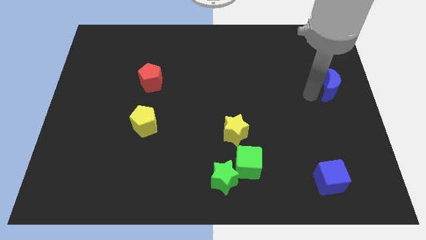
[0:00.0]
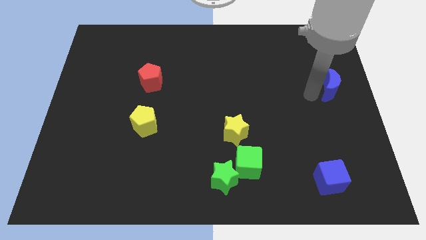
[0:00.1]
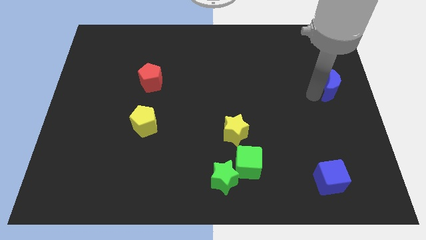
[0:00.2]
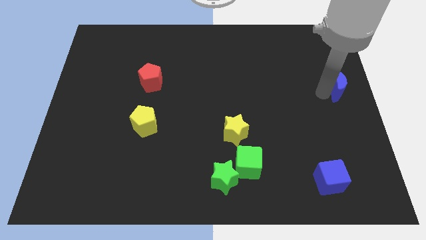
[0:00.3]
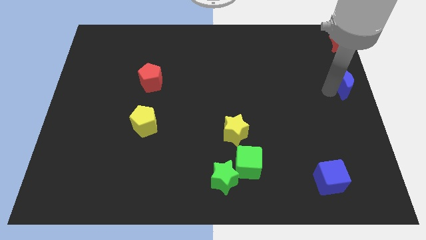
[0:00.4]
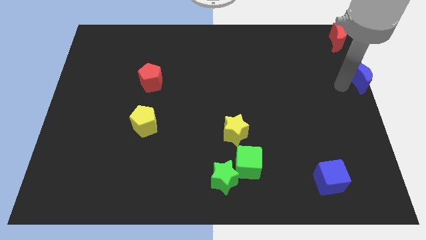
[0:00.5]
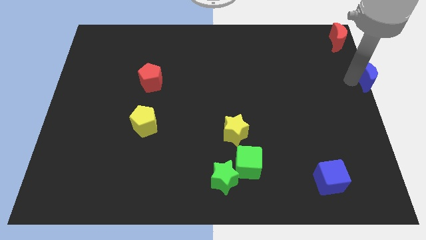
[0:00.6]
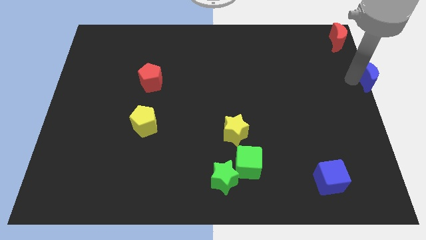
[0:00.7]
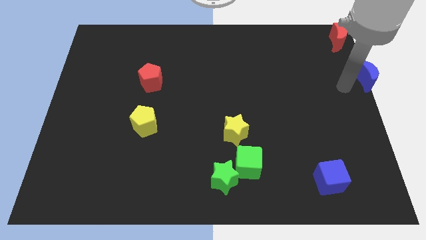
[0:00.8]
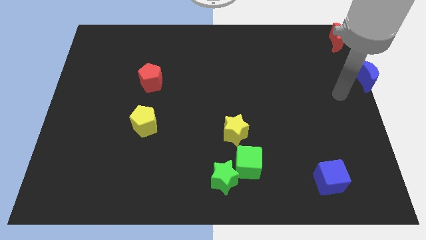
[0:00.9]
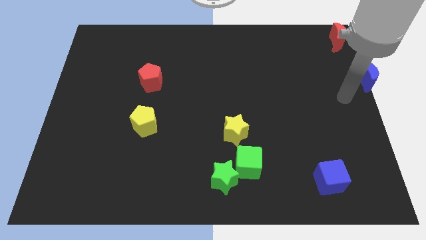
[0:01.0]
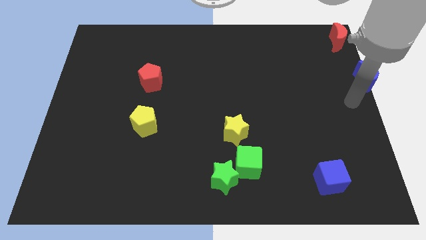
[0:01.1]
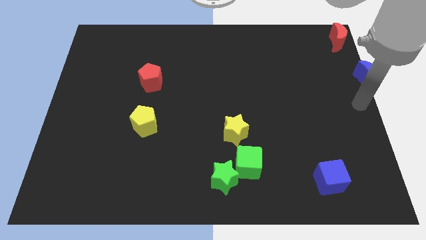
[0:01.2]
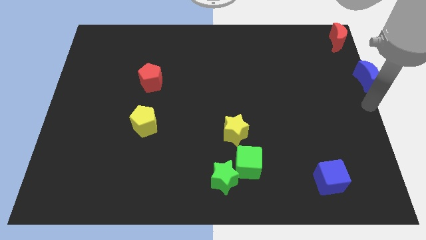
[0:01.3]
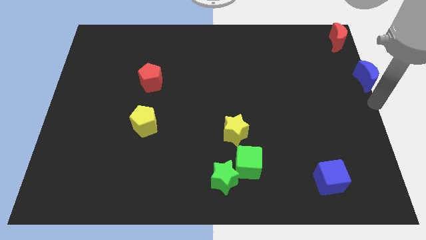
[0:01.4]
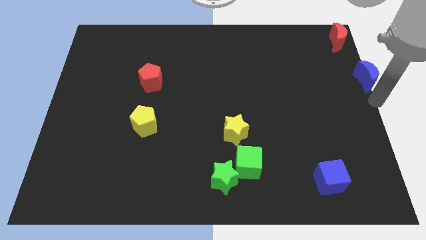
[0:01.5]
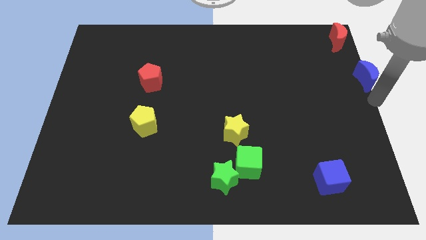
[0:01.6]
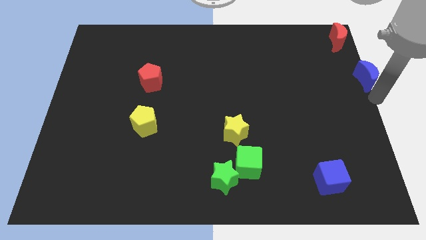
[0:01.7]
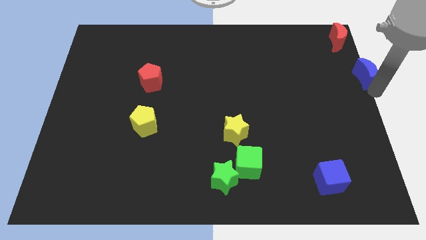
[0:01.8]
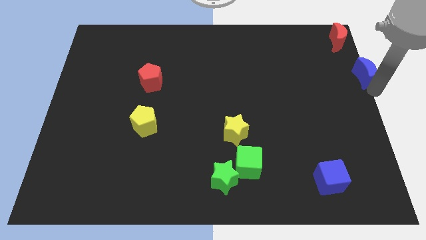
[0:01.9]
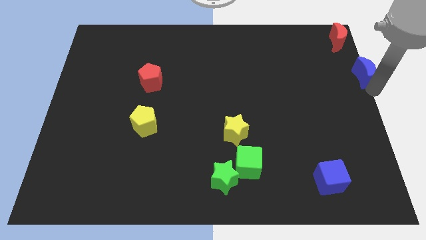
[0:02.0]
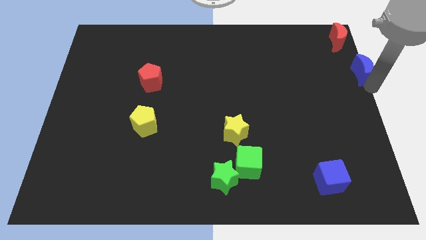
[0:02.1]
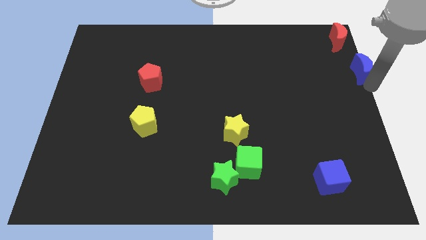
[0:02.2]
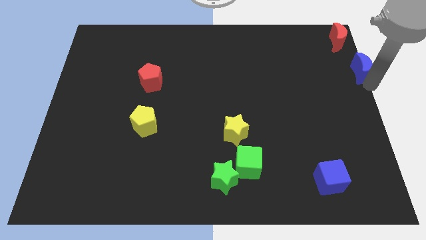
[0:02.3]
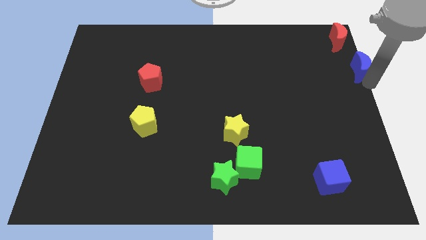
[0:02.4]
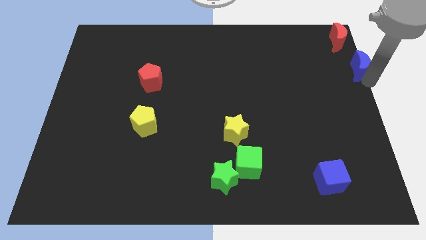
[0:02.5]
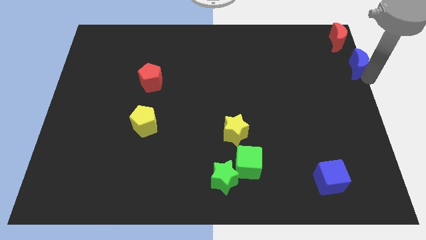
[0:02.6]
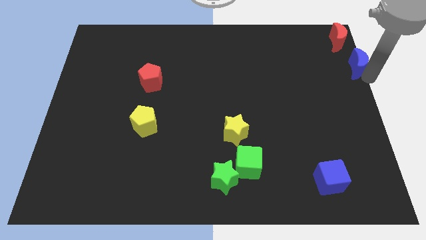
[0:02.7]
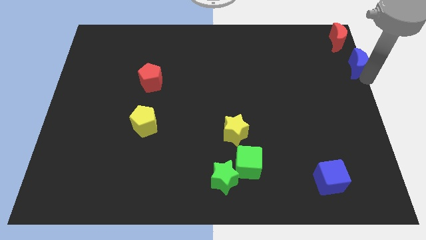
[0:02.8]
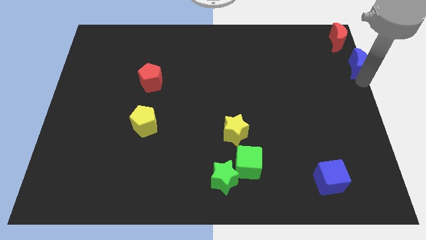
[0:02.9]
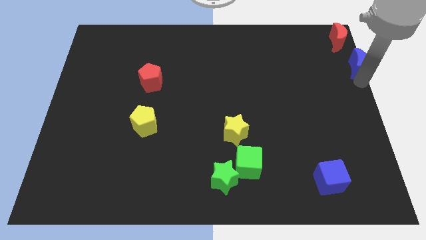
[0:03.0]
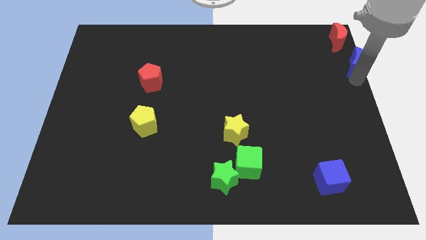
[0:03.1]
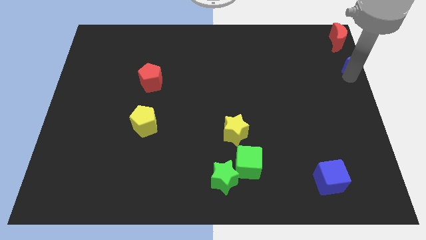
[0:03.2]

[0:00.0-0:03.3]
push blue moon towards top right corner of the board

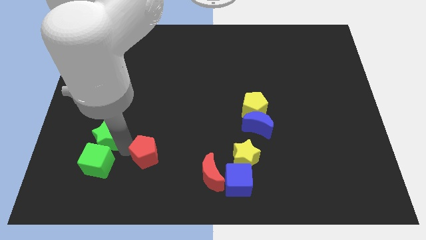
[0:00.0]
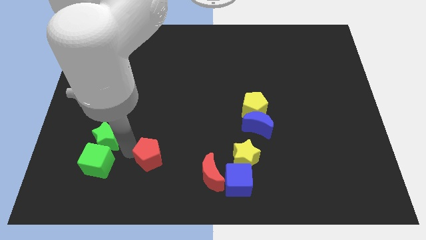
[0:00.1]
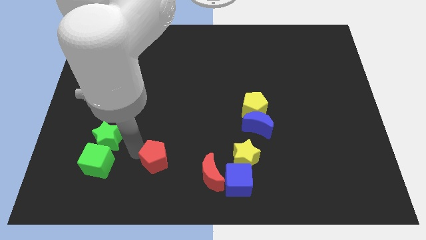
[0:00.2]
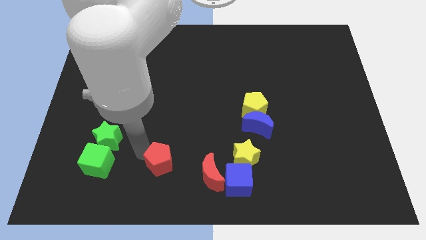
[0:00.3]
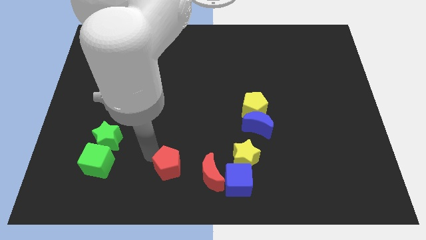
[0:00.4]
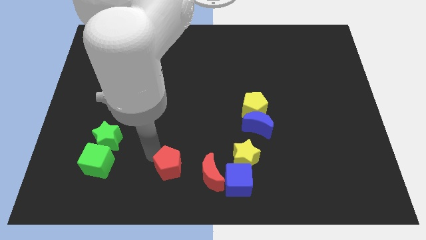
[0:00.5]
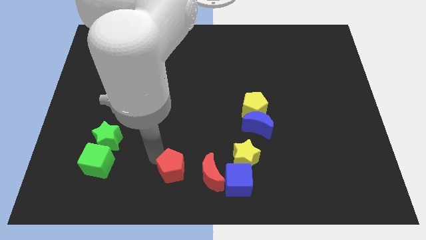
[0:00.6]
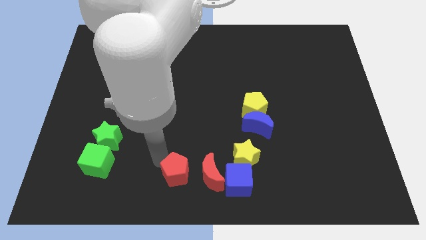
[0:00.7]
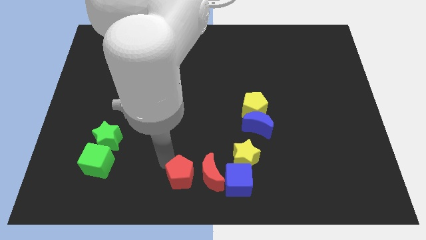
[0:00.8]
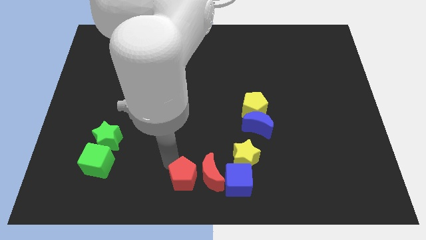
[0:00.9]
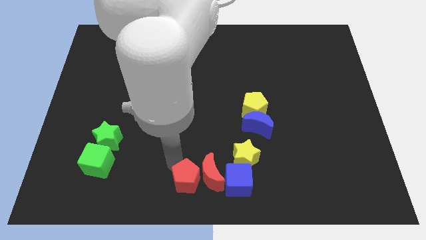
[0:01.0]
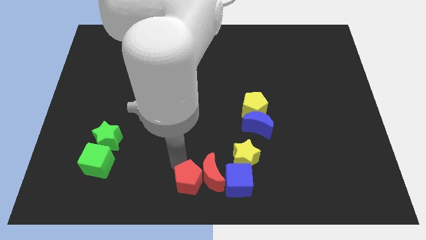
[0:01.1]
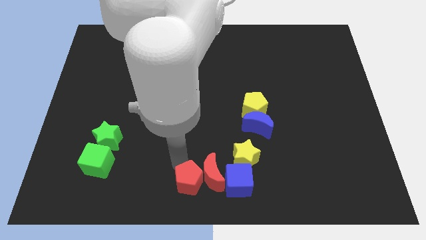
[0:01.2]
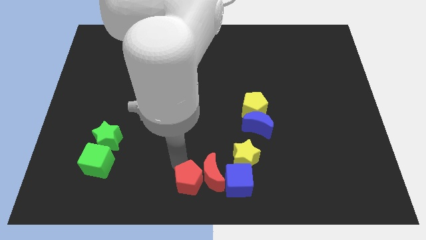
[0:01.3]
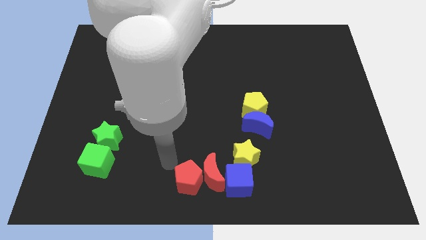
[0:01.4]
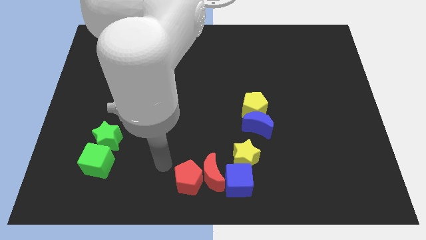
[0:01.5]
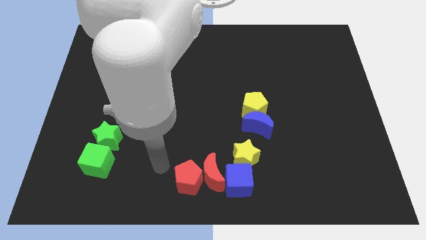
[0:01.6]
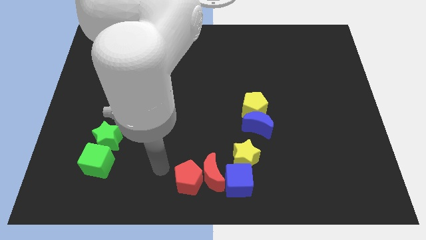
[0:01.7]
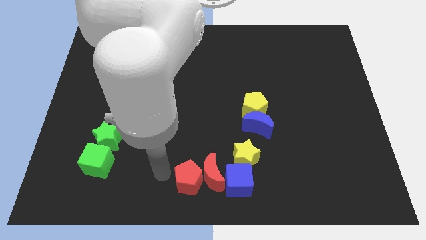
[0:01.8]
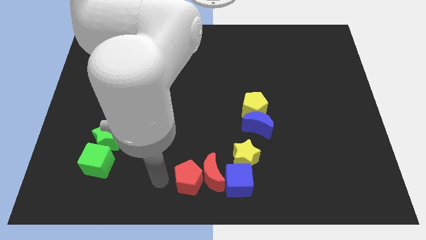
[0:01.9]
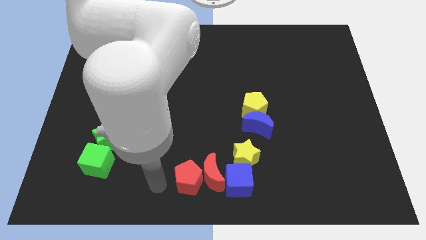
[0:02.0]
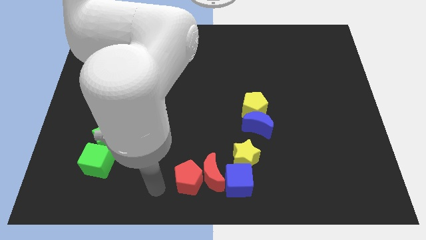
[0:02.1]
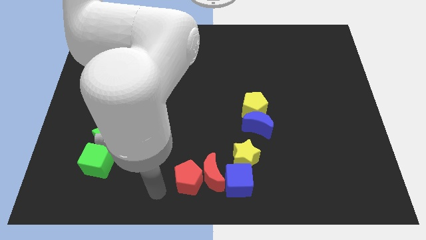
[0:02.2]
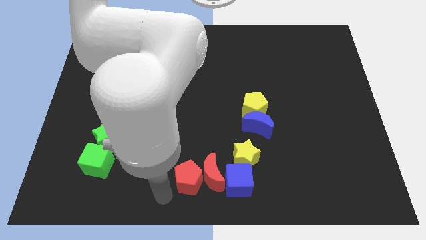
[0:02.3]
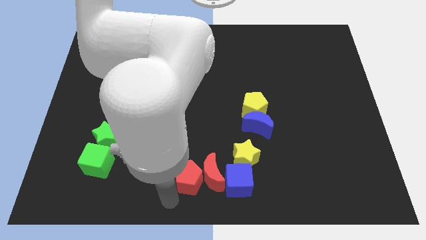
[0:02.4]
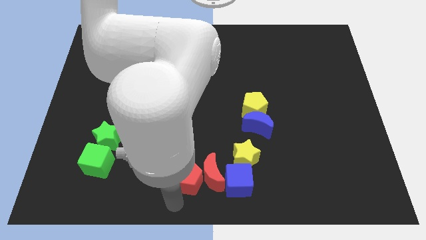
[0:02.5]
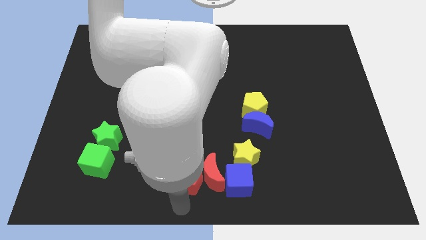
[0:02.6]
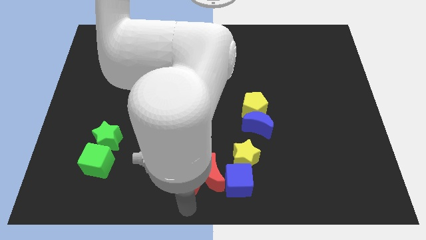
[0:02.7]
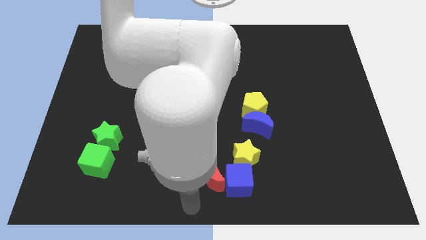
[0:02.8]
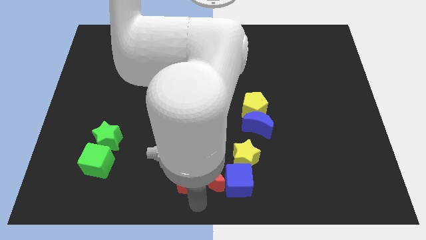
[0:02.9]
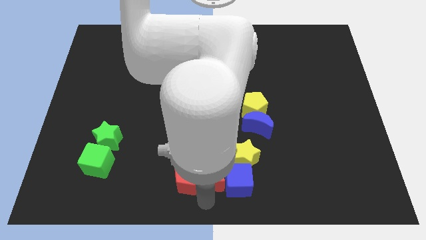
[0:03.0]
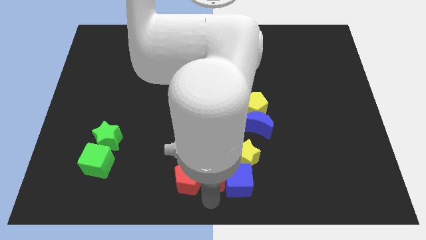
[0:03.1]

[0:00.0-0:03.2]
place the red pentagon to the left of the red moon

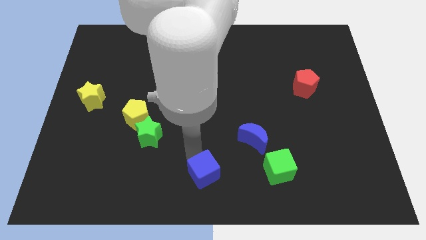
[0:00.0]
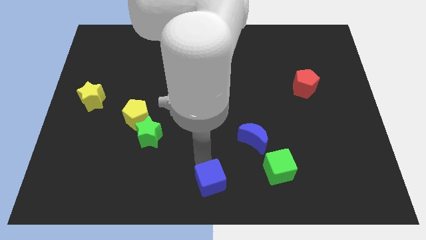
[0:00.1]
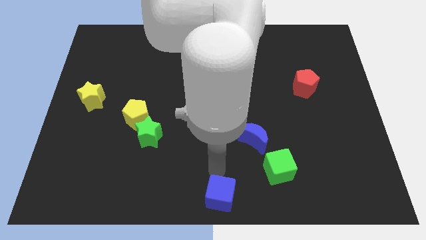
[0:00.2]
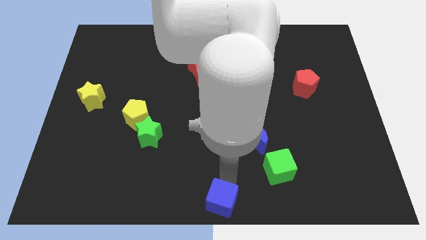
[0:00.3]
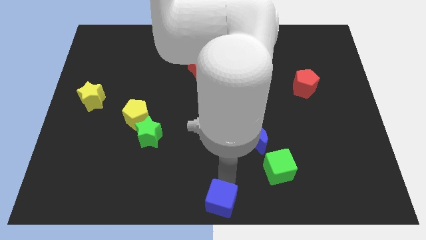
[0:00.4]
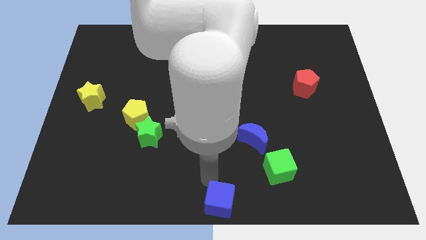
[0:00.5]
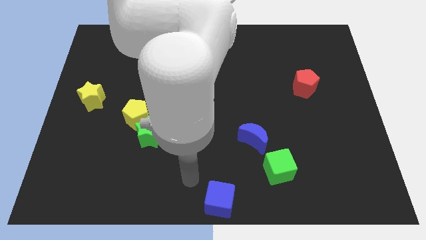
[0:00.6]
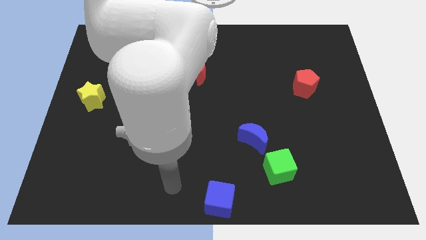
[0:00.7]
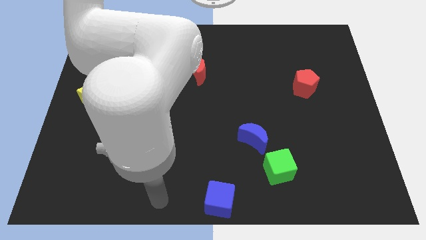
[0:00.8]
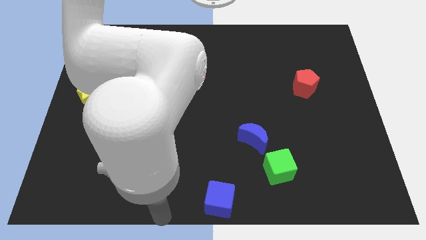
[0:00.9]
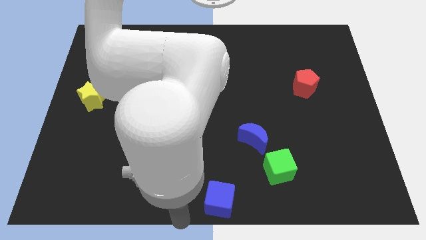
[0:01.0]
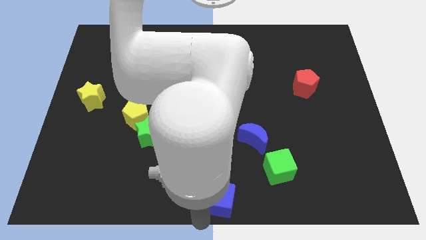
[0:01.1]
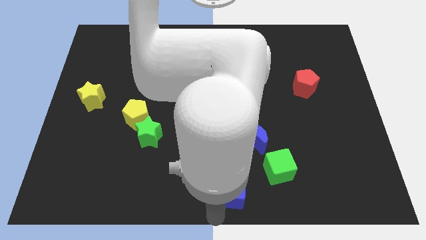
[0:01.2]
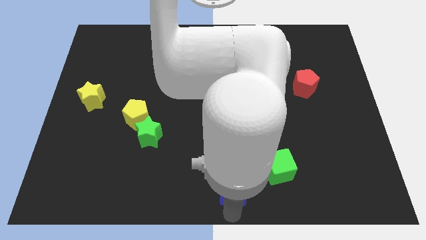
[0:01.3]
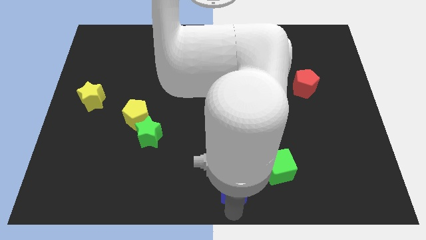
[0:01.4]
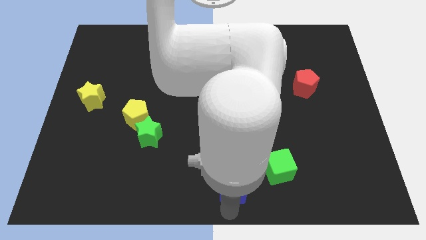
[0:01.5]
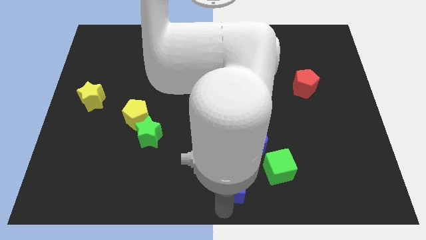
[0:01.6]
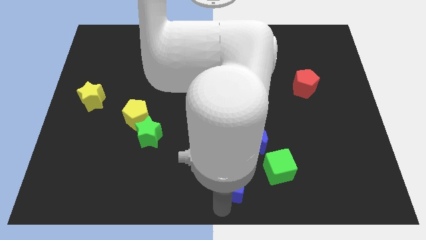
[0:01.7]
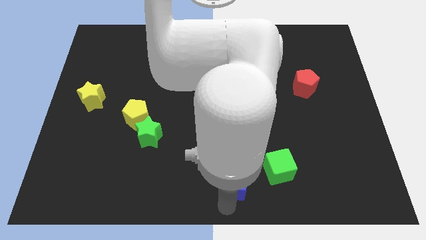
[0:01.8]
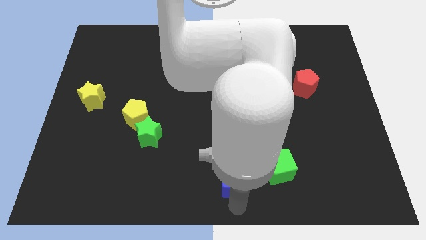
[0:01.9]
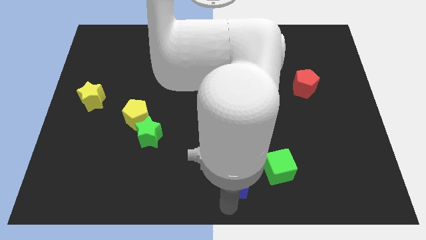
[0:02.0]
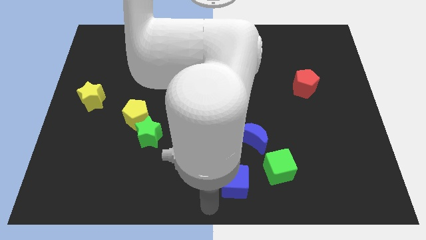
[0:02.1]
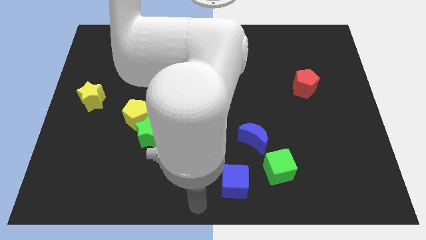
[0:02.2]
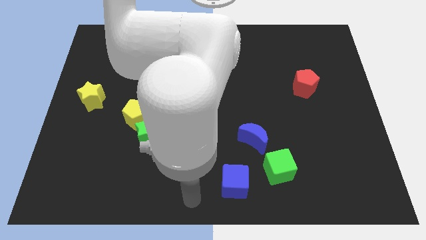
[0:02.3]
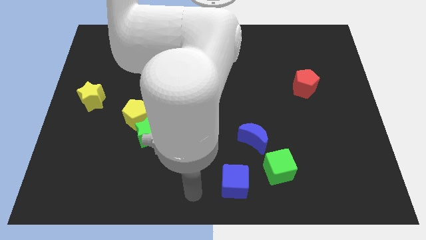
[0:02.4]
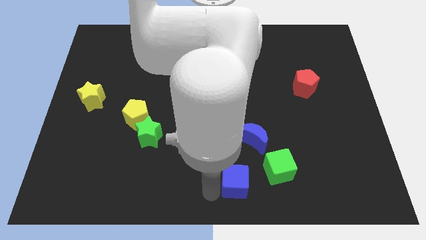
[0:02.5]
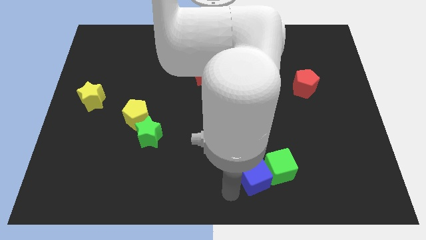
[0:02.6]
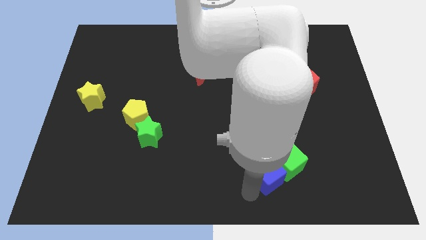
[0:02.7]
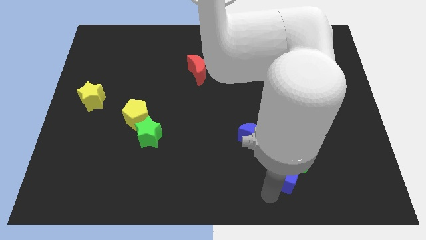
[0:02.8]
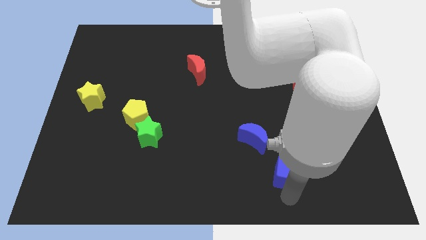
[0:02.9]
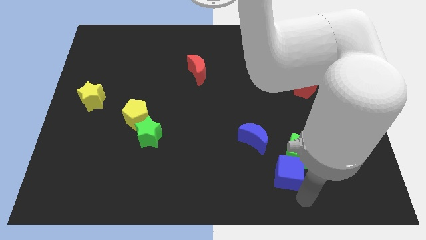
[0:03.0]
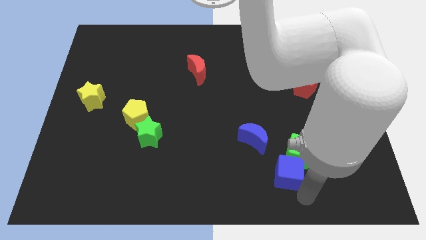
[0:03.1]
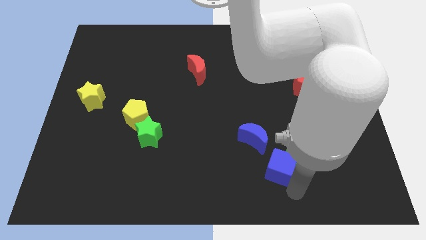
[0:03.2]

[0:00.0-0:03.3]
push blue cube in to green cube
